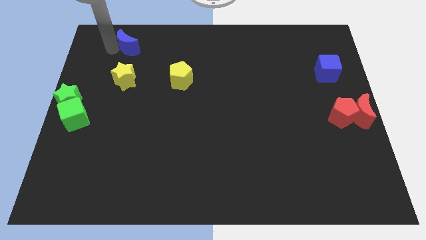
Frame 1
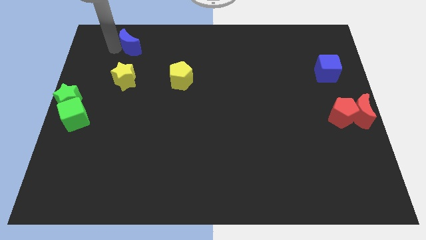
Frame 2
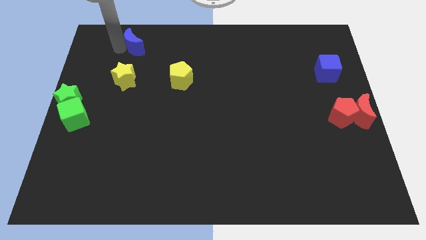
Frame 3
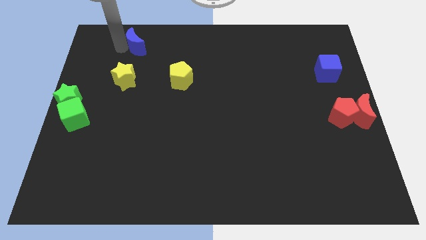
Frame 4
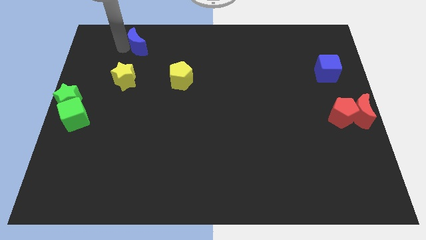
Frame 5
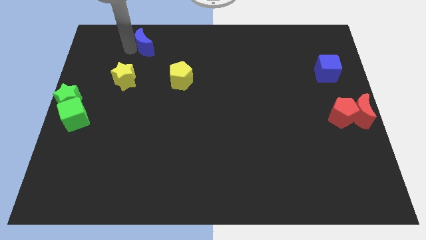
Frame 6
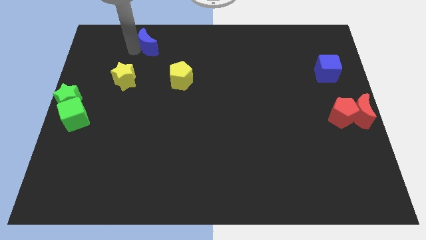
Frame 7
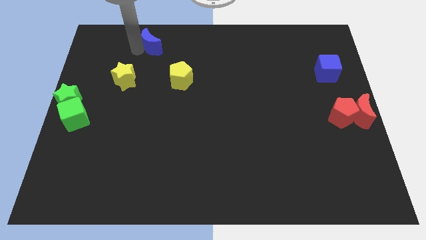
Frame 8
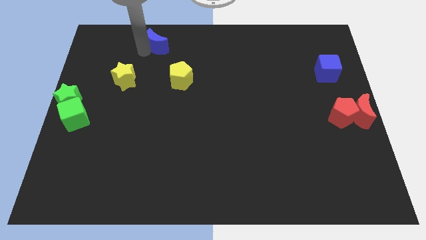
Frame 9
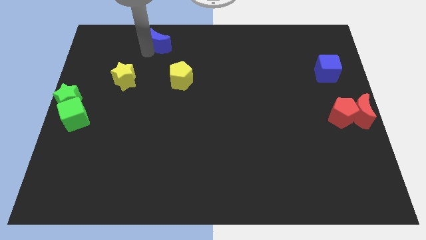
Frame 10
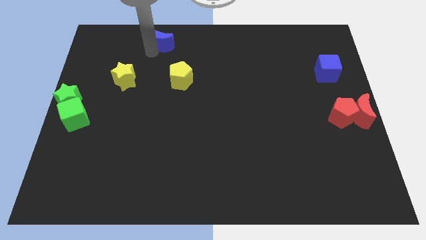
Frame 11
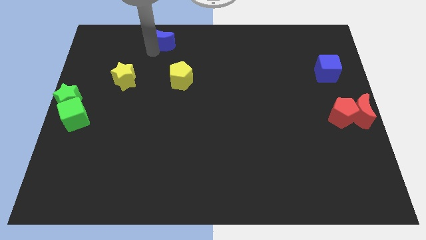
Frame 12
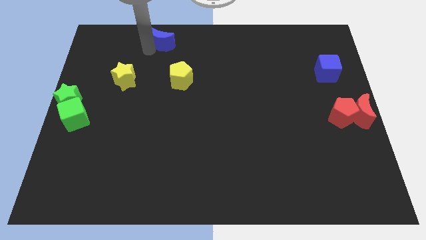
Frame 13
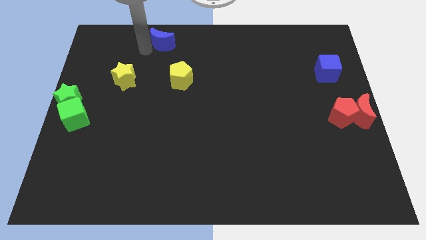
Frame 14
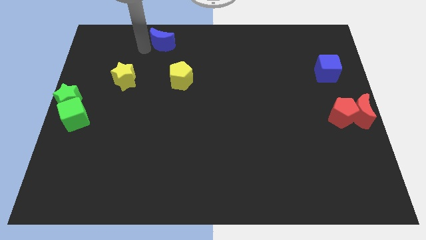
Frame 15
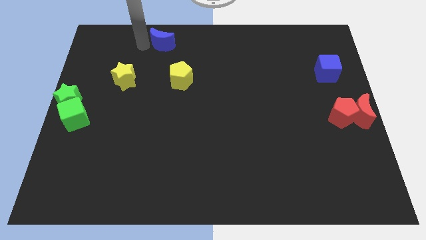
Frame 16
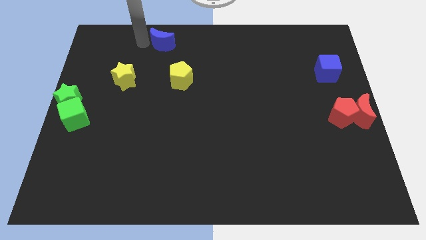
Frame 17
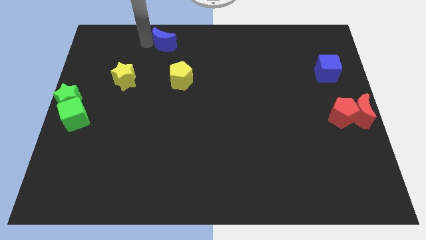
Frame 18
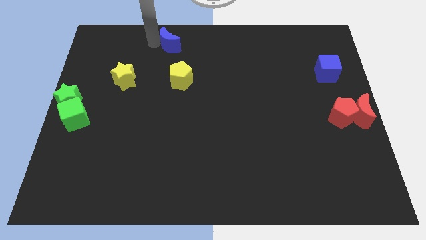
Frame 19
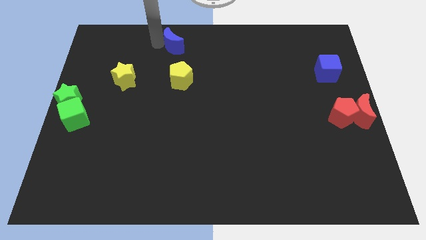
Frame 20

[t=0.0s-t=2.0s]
slide the blue moon to the top of the yellow pentagon

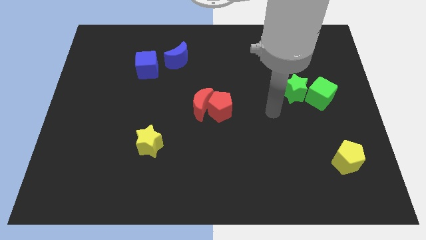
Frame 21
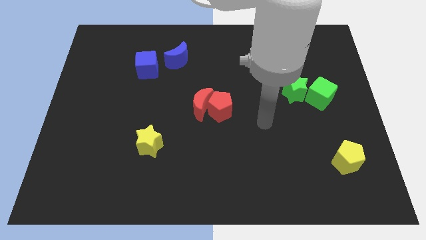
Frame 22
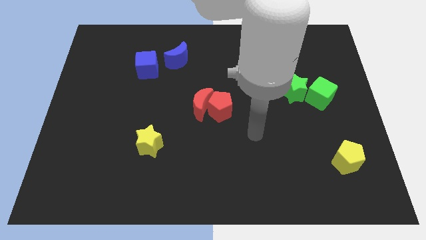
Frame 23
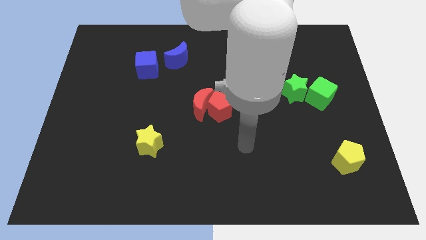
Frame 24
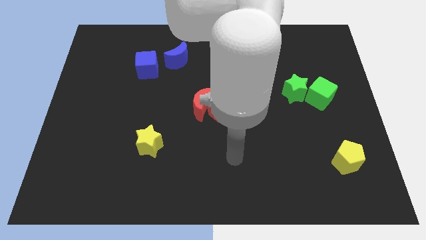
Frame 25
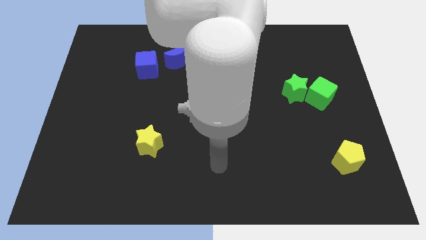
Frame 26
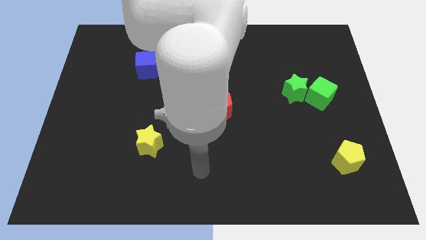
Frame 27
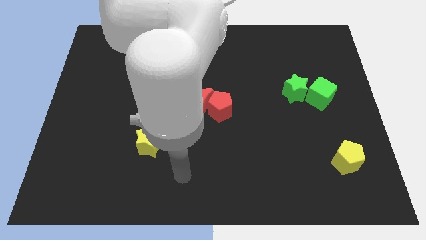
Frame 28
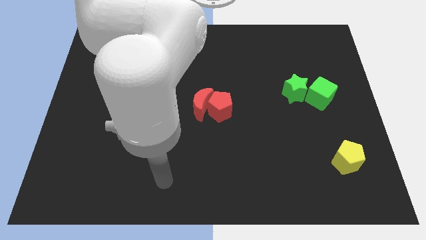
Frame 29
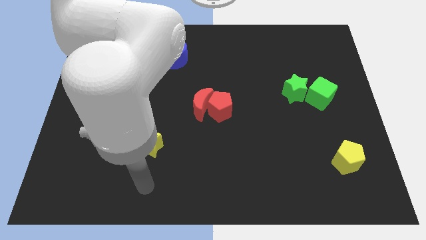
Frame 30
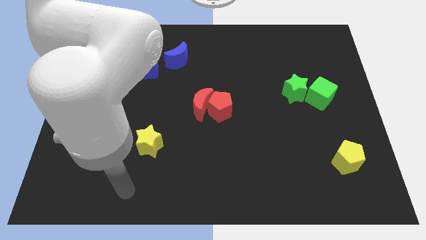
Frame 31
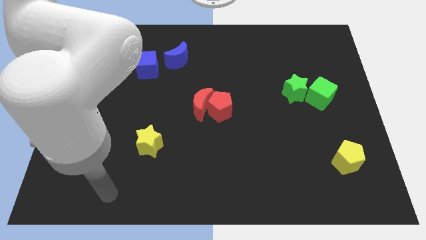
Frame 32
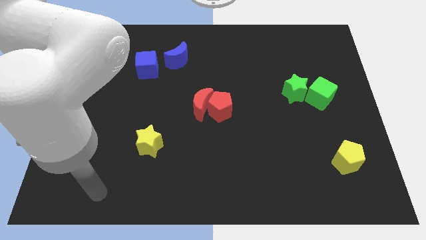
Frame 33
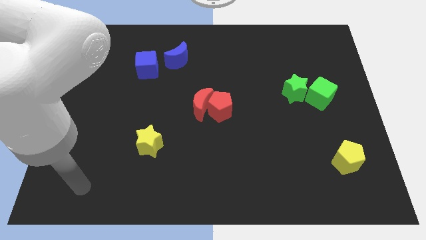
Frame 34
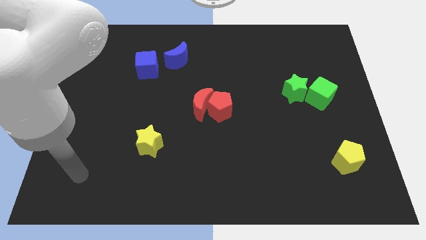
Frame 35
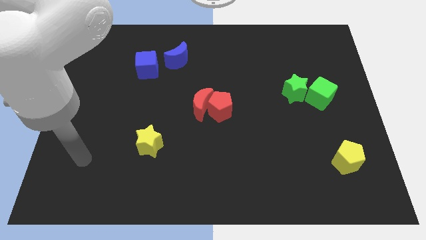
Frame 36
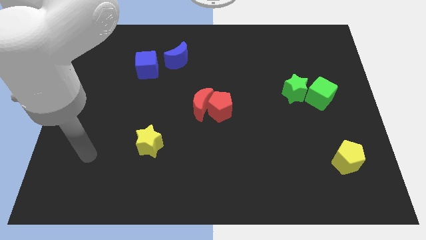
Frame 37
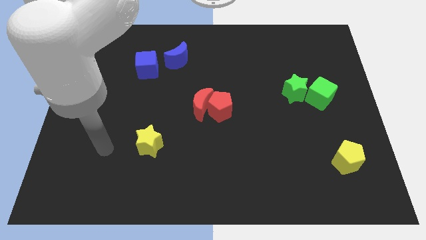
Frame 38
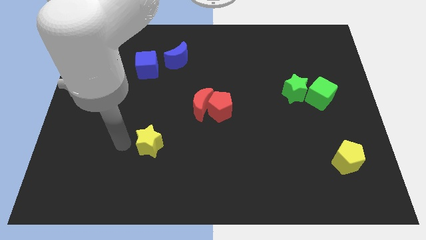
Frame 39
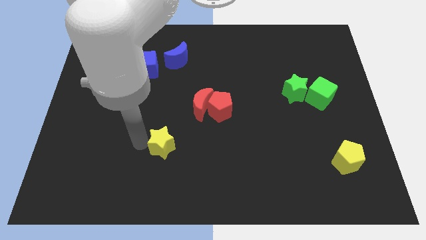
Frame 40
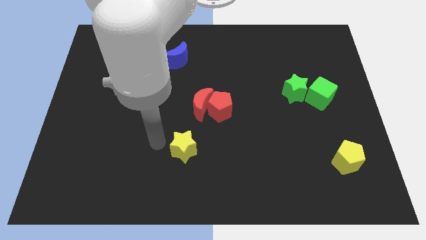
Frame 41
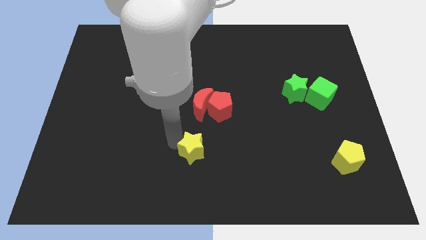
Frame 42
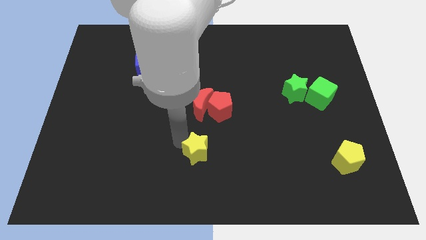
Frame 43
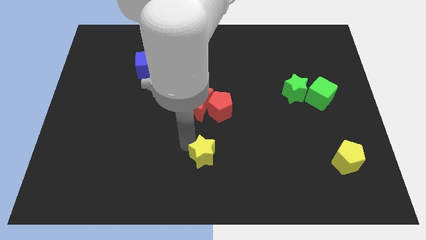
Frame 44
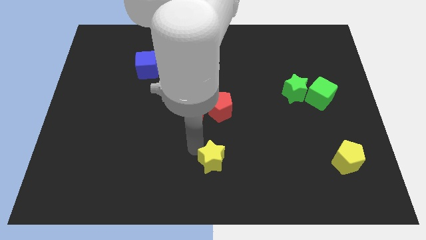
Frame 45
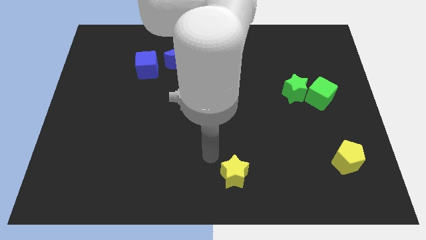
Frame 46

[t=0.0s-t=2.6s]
place yellow star to the bottom of red pentagon

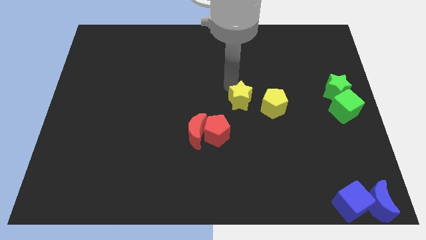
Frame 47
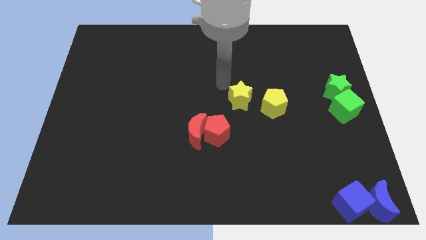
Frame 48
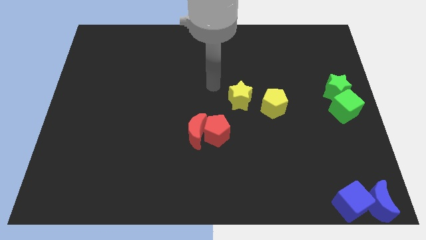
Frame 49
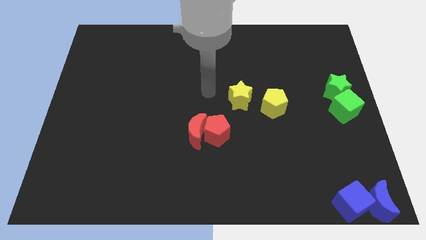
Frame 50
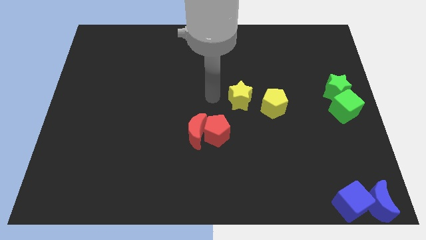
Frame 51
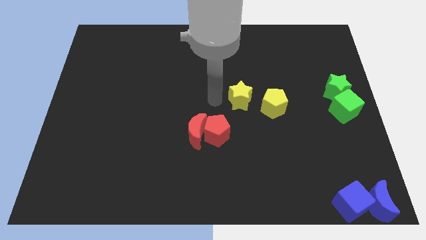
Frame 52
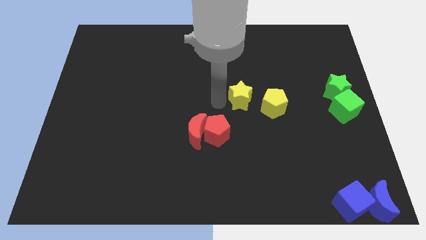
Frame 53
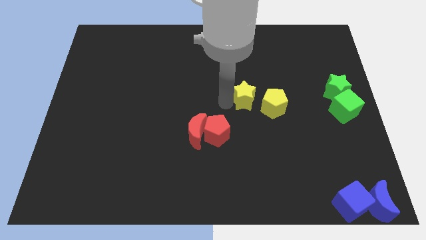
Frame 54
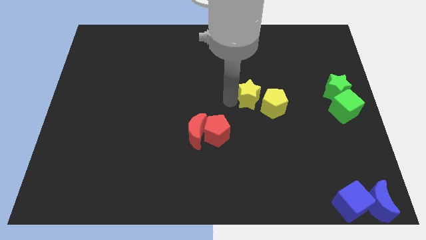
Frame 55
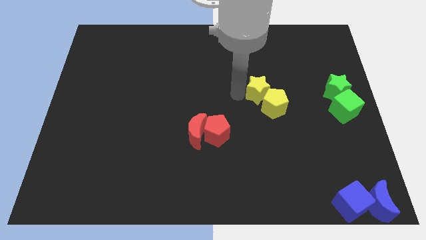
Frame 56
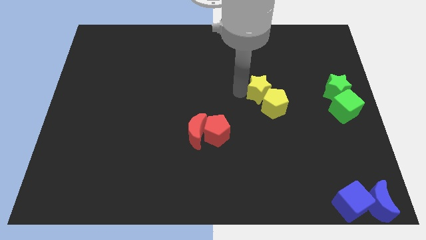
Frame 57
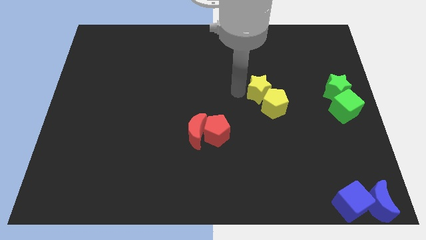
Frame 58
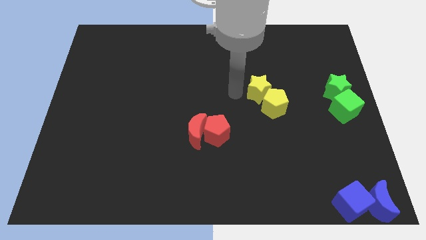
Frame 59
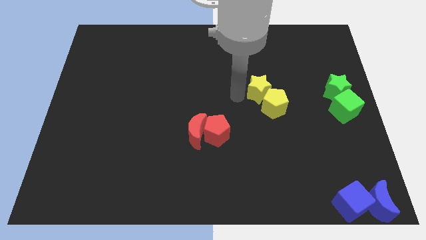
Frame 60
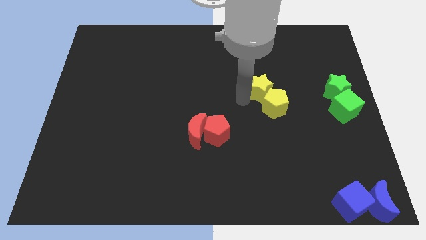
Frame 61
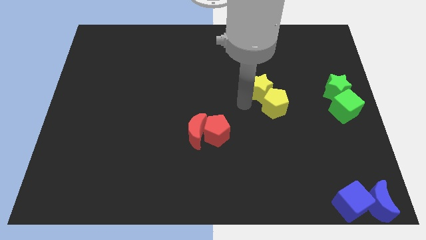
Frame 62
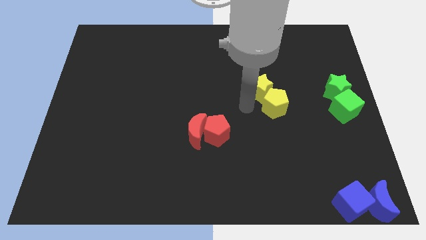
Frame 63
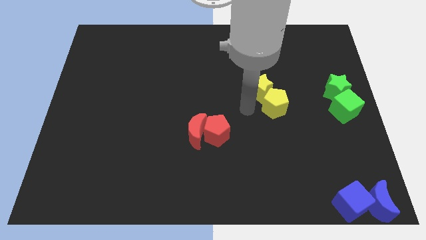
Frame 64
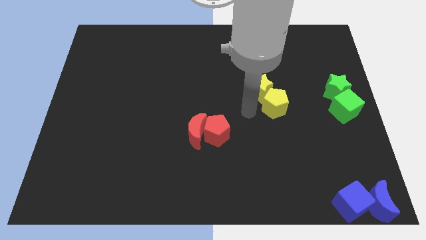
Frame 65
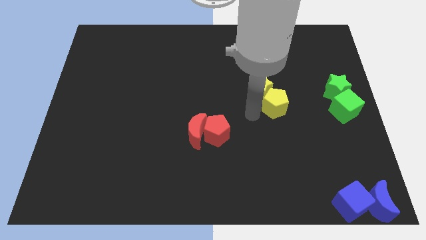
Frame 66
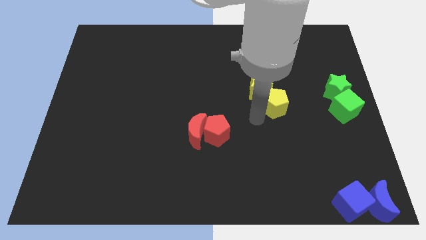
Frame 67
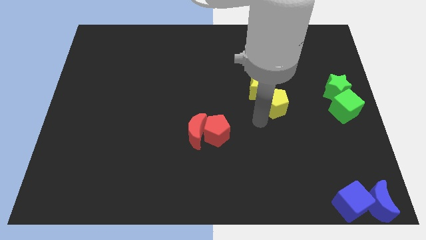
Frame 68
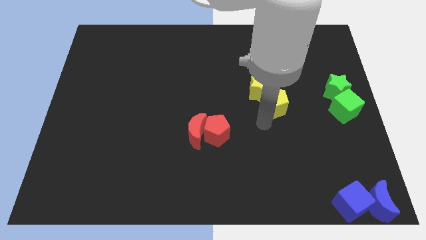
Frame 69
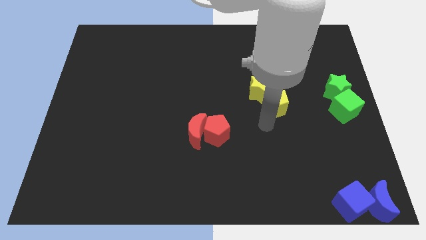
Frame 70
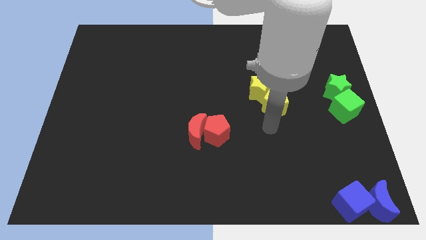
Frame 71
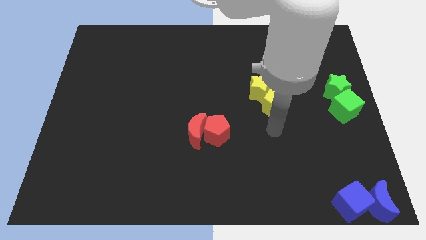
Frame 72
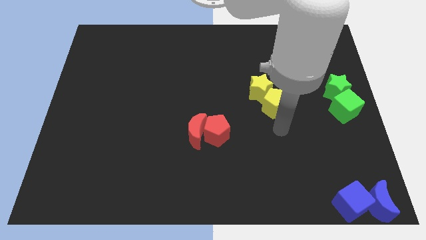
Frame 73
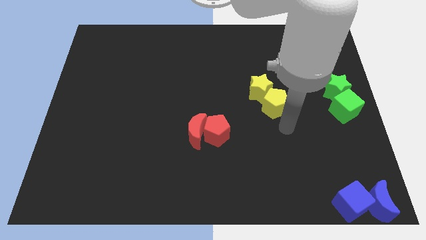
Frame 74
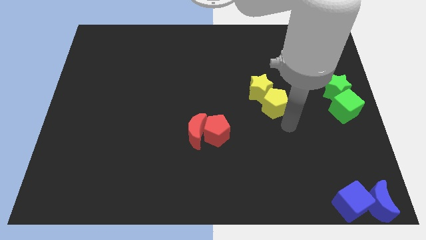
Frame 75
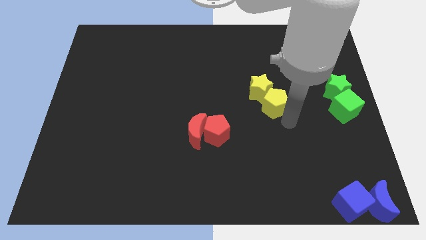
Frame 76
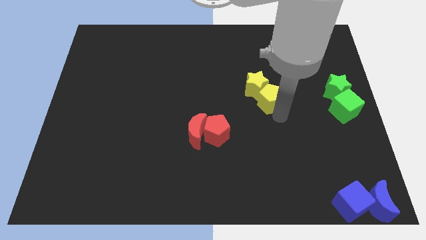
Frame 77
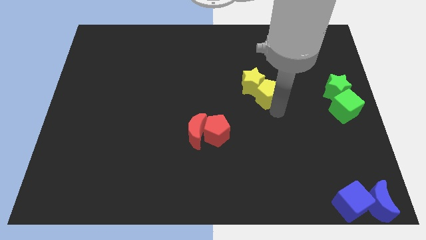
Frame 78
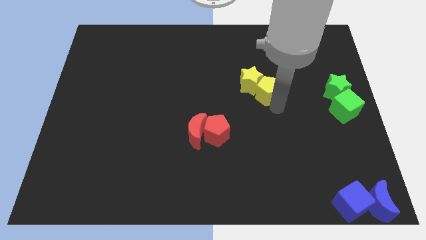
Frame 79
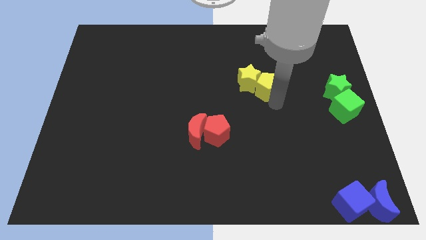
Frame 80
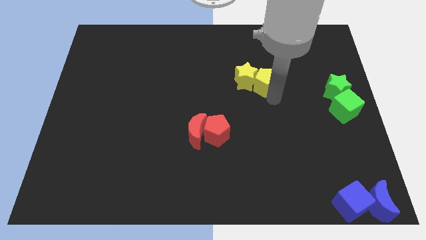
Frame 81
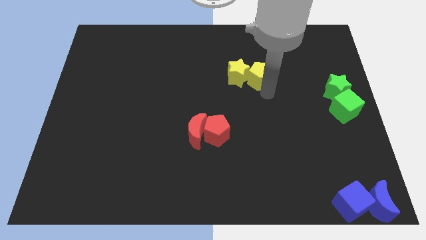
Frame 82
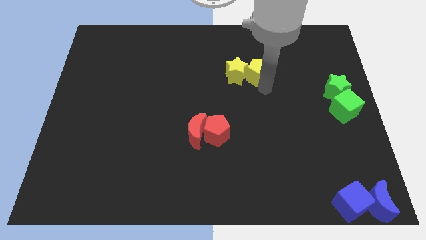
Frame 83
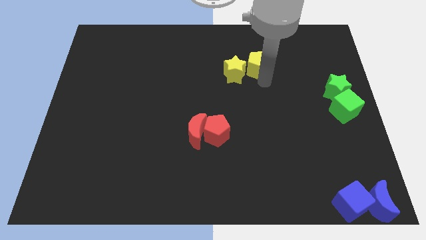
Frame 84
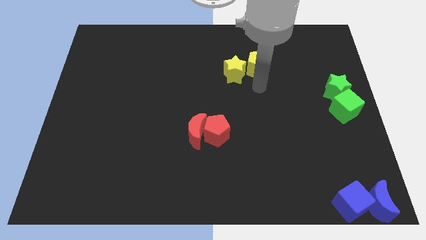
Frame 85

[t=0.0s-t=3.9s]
push yellow pentagon slightly towards upwards

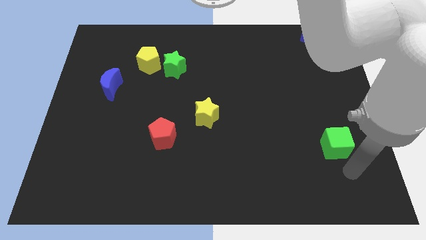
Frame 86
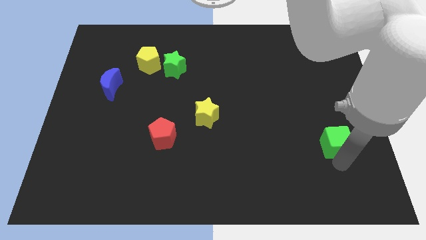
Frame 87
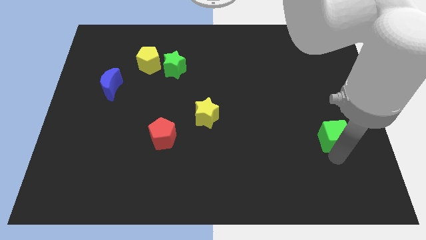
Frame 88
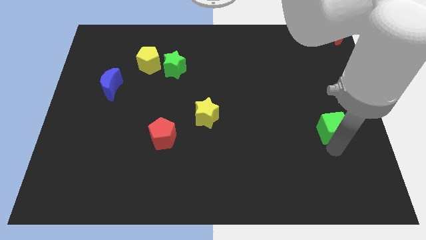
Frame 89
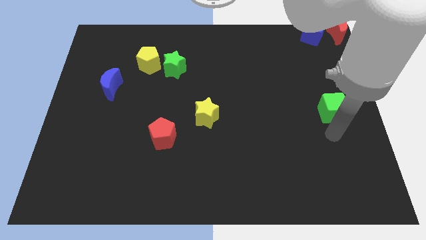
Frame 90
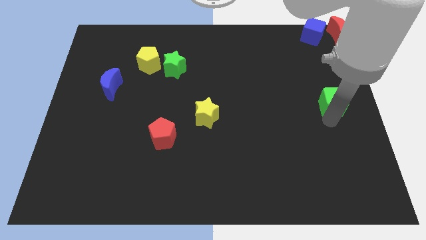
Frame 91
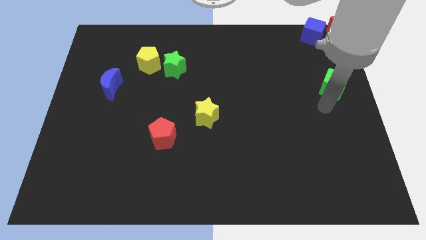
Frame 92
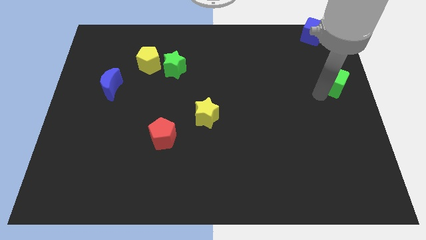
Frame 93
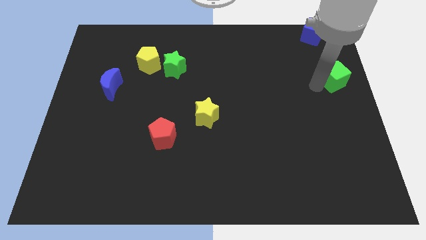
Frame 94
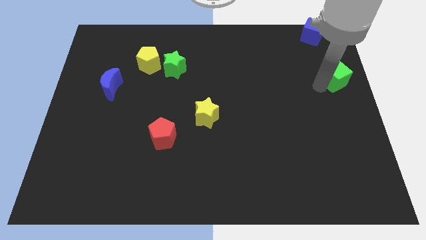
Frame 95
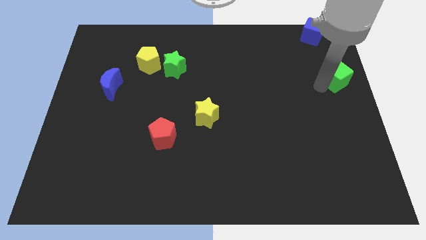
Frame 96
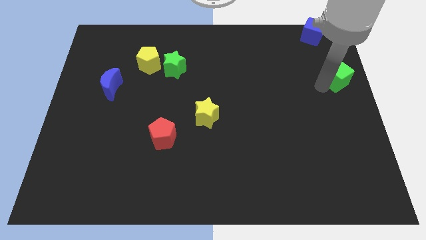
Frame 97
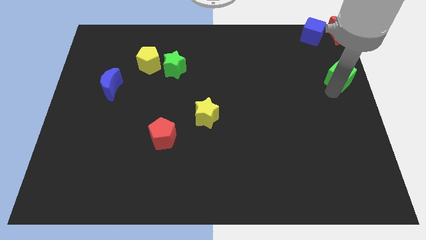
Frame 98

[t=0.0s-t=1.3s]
move green cube towards the bottom of red crescent
